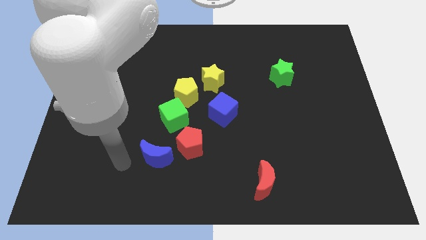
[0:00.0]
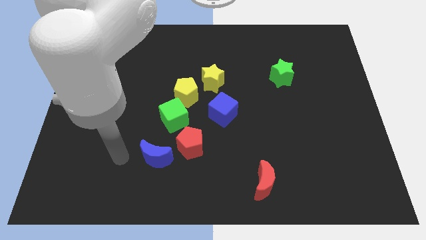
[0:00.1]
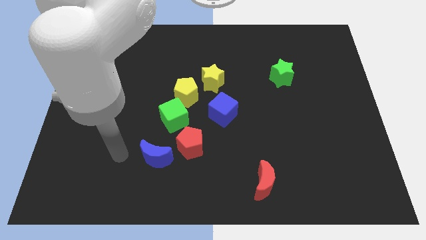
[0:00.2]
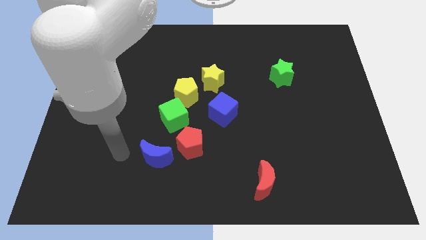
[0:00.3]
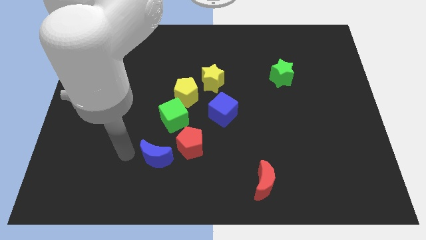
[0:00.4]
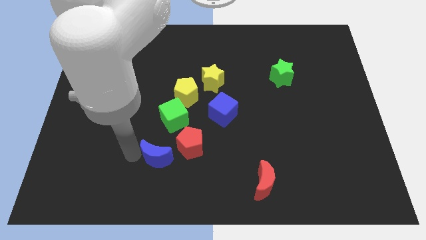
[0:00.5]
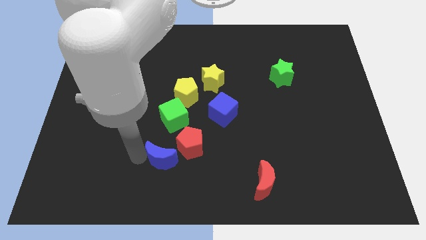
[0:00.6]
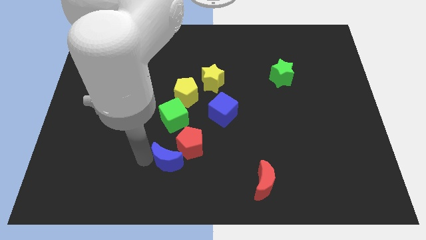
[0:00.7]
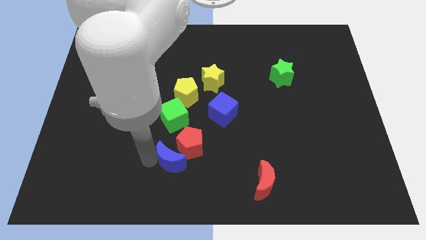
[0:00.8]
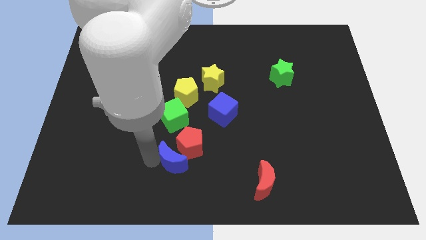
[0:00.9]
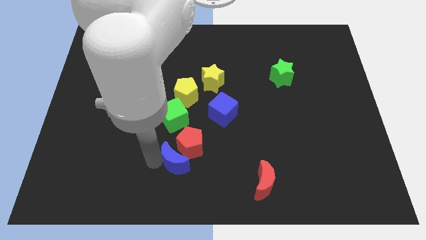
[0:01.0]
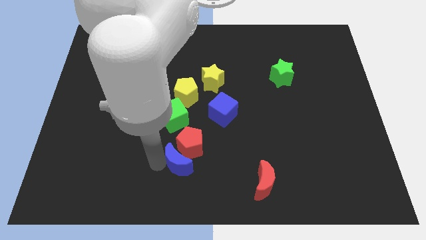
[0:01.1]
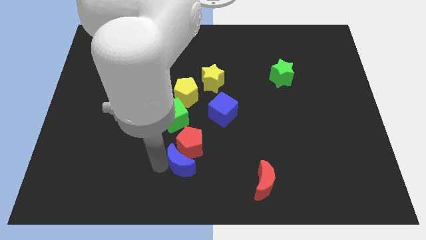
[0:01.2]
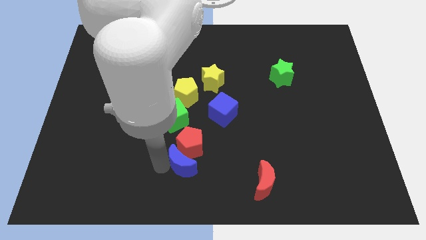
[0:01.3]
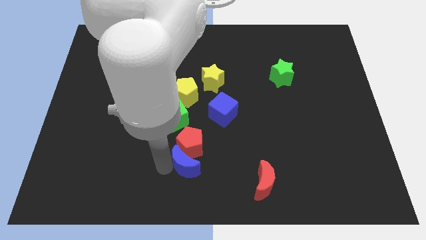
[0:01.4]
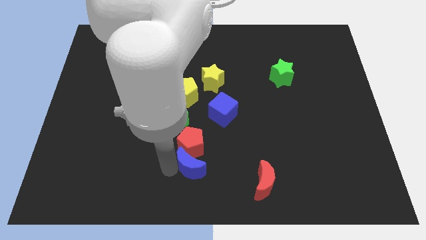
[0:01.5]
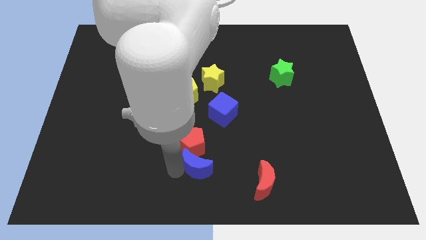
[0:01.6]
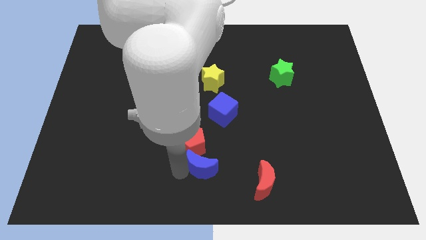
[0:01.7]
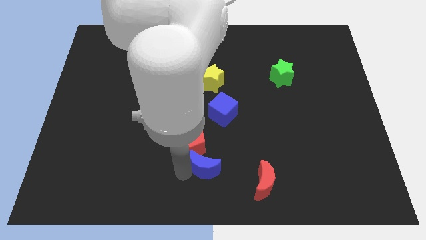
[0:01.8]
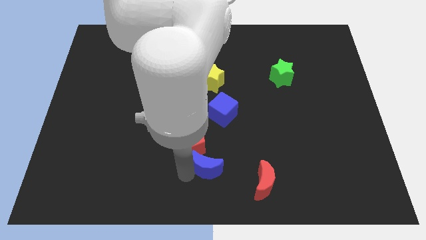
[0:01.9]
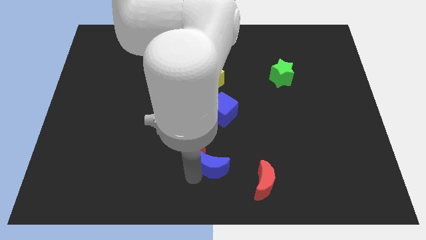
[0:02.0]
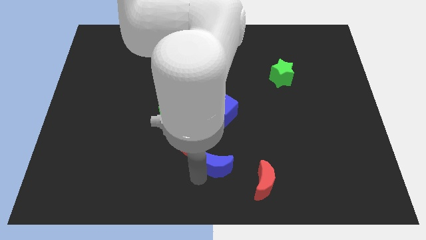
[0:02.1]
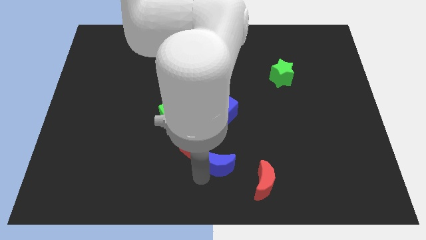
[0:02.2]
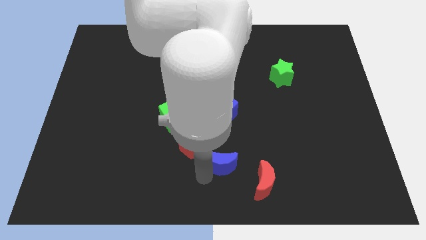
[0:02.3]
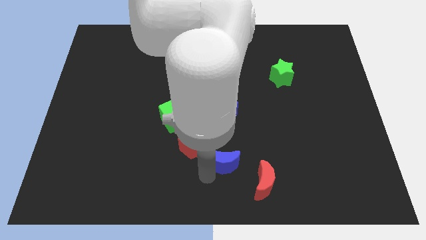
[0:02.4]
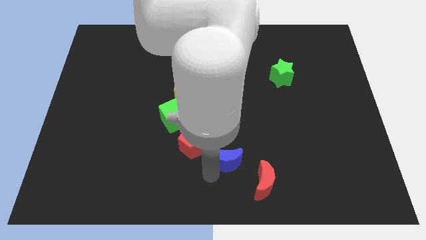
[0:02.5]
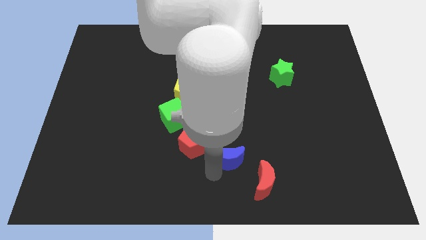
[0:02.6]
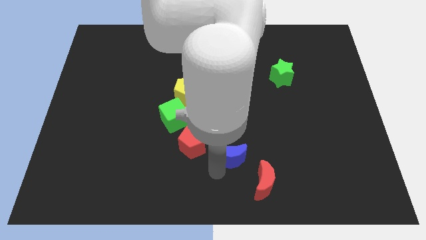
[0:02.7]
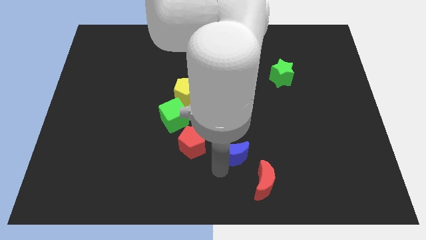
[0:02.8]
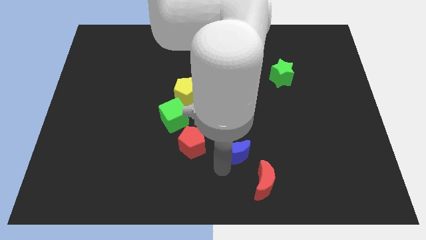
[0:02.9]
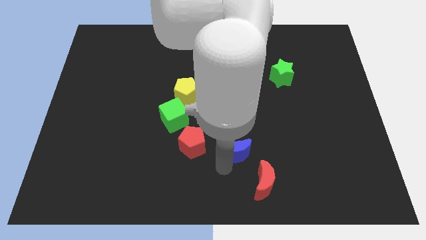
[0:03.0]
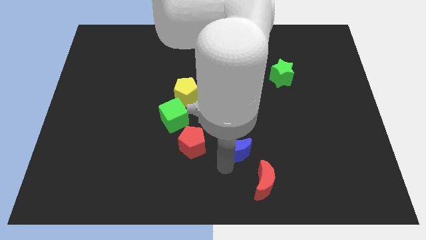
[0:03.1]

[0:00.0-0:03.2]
place the blue crescent below the blue cube

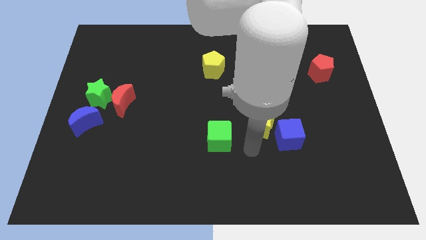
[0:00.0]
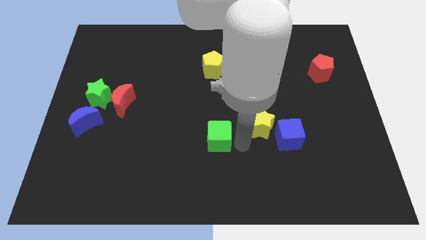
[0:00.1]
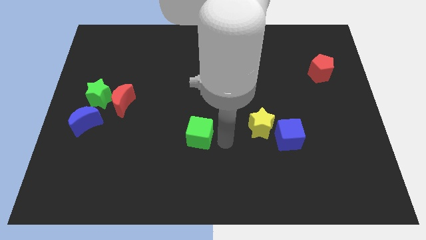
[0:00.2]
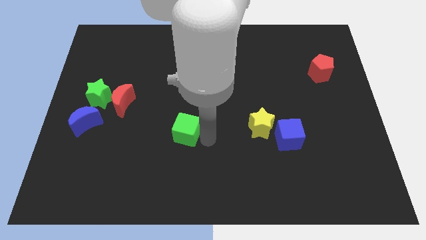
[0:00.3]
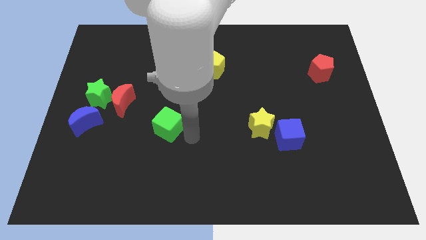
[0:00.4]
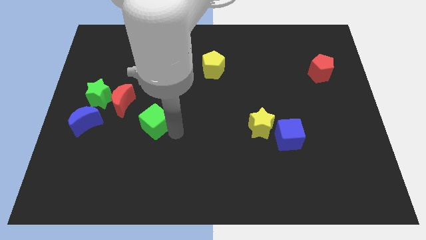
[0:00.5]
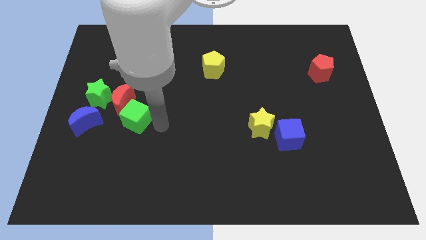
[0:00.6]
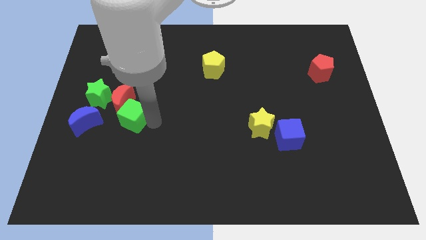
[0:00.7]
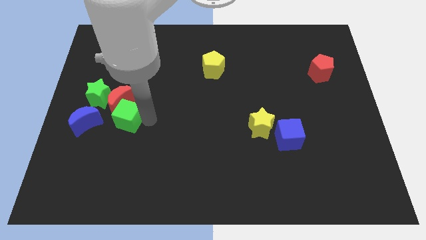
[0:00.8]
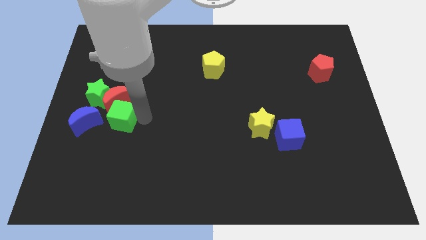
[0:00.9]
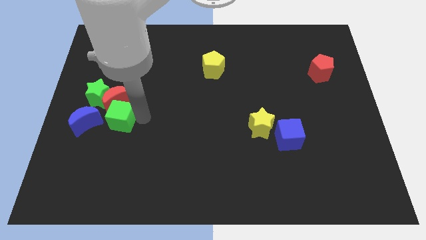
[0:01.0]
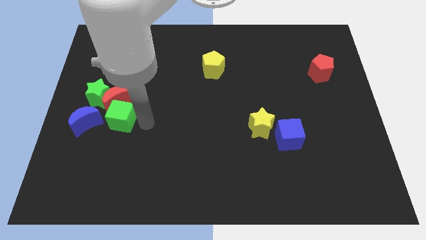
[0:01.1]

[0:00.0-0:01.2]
put the green cube at the bottom of the red crescent

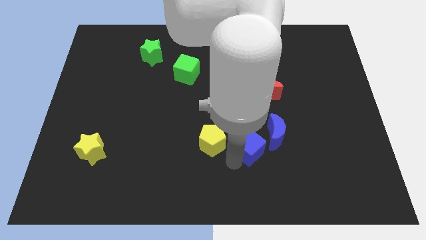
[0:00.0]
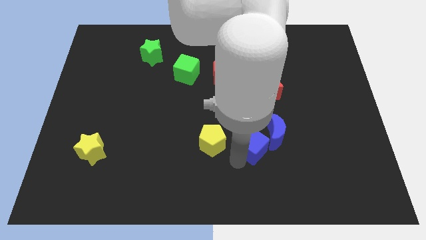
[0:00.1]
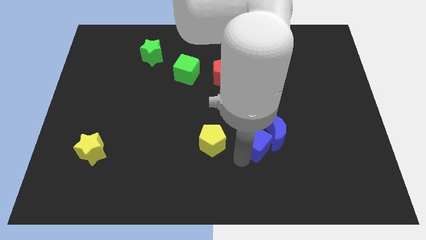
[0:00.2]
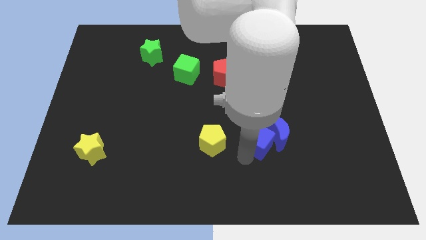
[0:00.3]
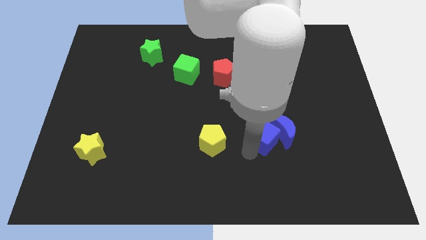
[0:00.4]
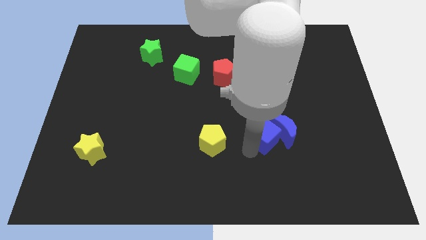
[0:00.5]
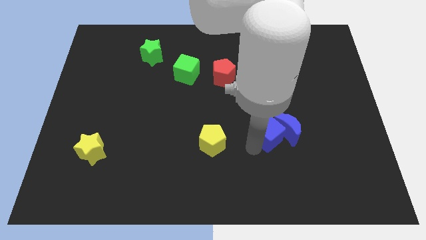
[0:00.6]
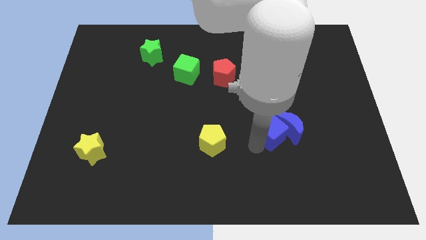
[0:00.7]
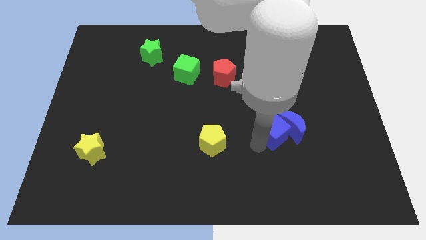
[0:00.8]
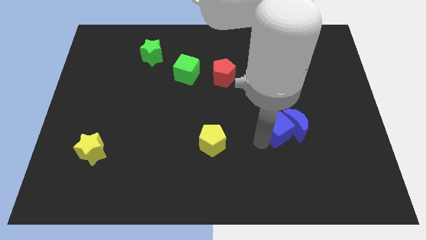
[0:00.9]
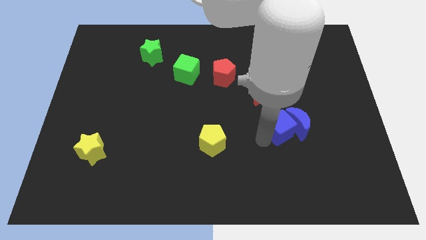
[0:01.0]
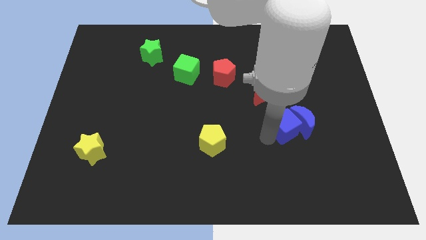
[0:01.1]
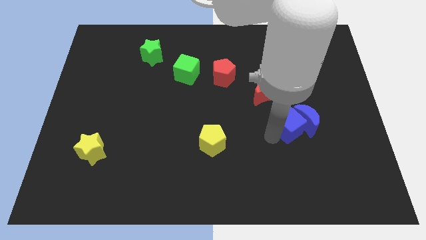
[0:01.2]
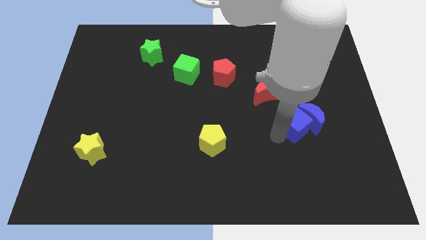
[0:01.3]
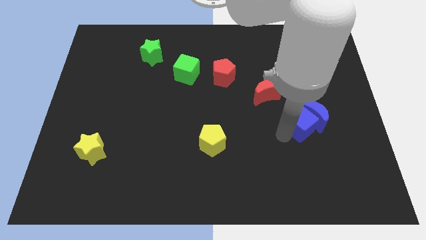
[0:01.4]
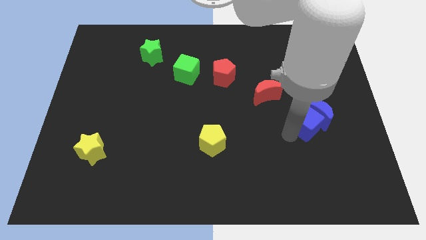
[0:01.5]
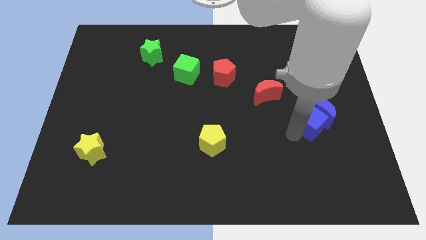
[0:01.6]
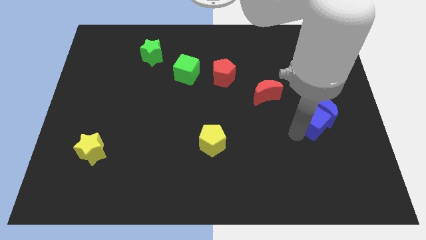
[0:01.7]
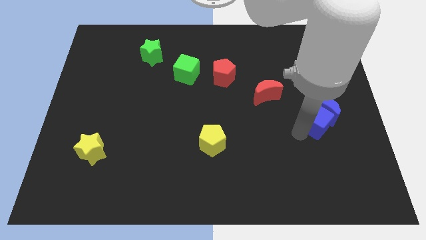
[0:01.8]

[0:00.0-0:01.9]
push the blue cube into the blue crescent

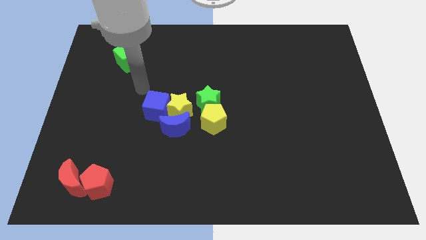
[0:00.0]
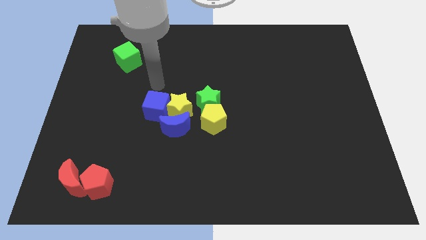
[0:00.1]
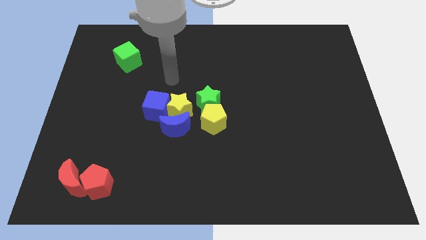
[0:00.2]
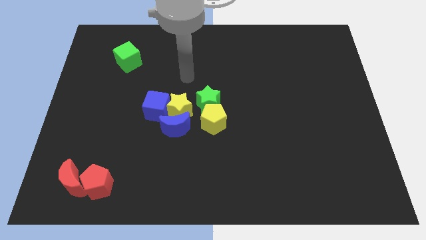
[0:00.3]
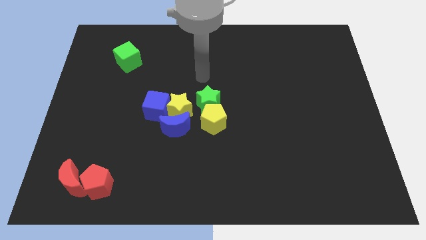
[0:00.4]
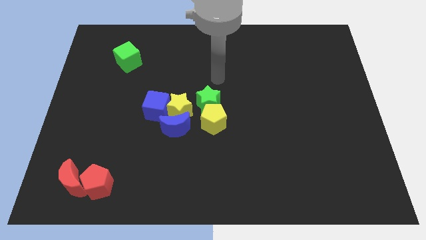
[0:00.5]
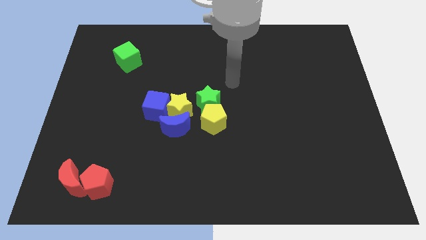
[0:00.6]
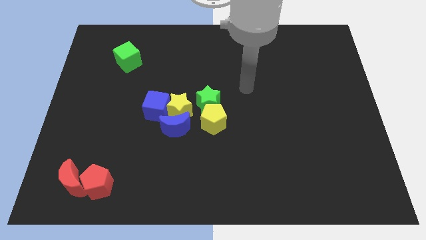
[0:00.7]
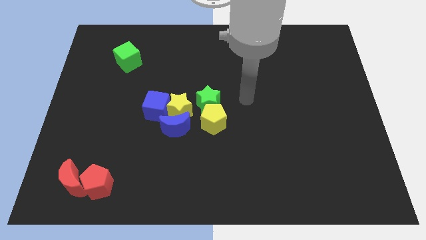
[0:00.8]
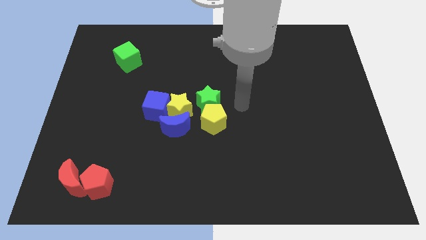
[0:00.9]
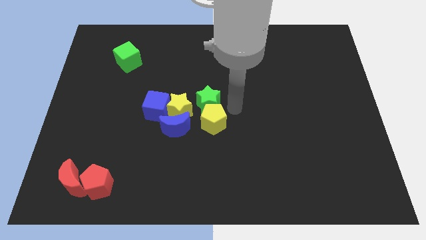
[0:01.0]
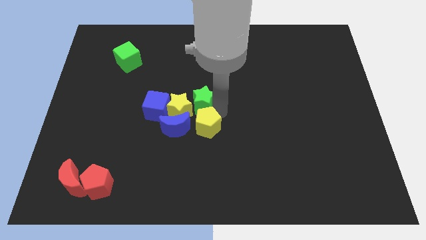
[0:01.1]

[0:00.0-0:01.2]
move your arm right to the green star

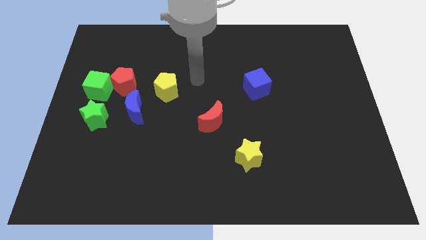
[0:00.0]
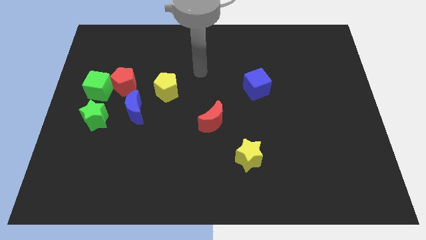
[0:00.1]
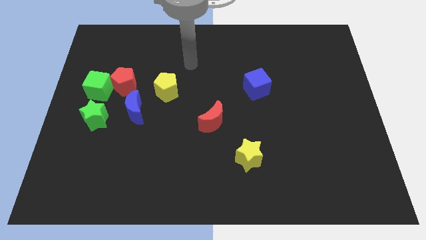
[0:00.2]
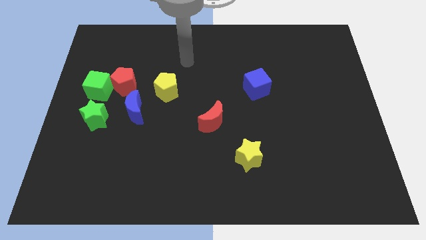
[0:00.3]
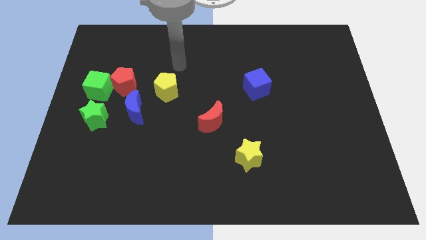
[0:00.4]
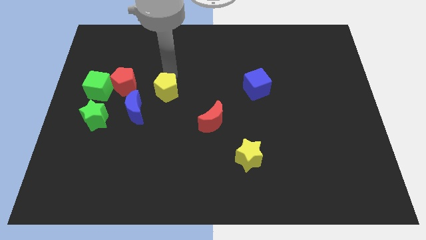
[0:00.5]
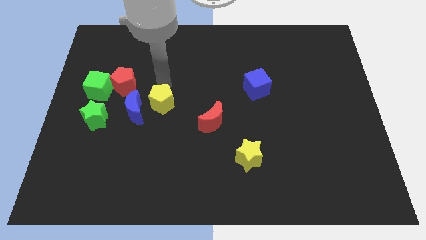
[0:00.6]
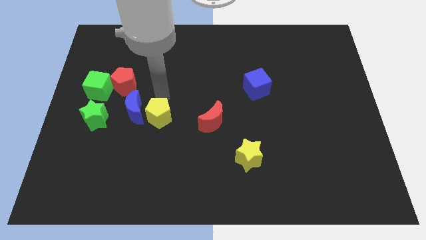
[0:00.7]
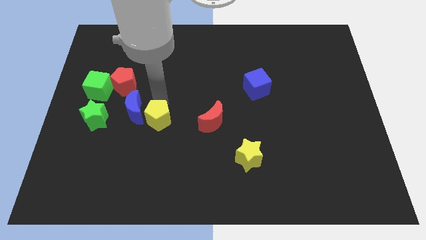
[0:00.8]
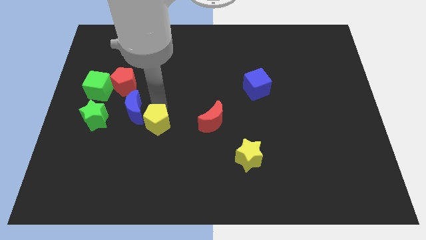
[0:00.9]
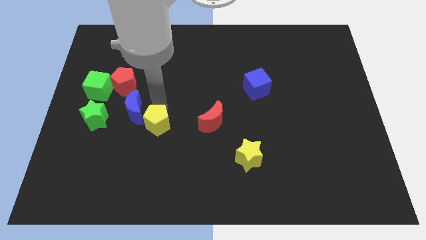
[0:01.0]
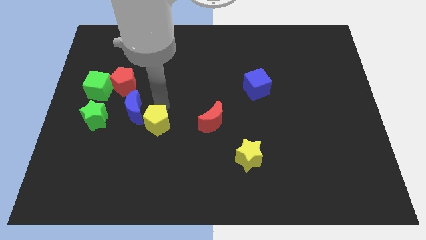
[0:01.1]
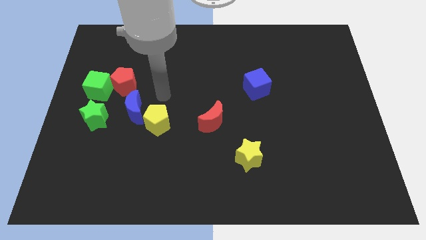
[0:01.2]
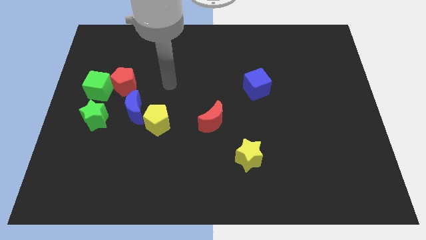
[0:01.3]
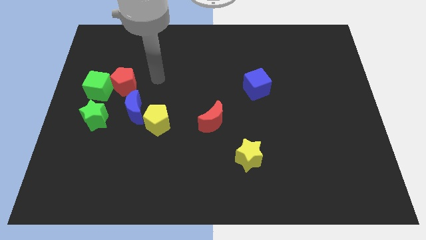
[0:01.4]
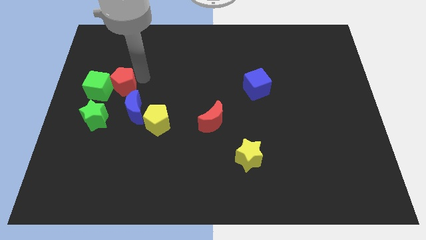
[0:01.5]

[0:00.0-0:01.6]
move the yellow pentagon diagonal to left of the red crescent
